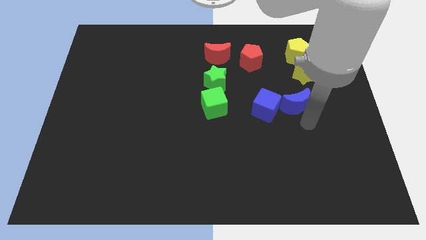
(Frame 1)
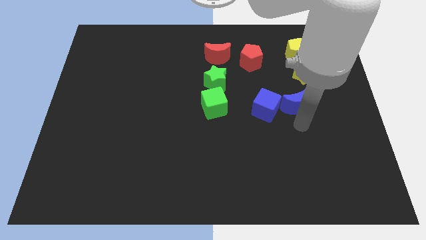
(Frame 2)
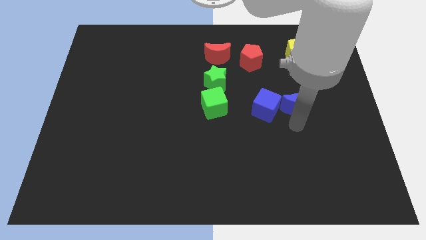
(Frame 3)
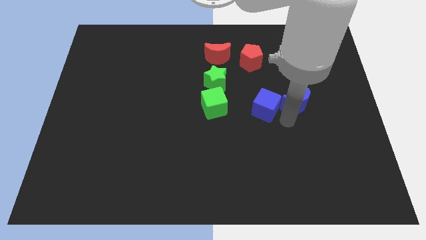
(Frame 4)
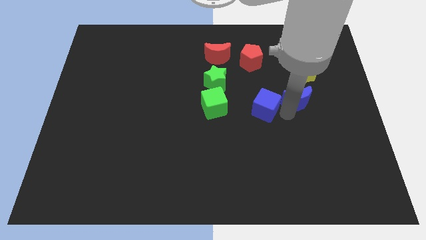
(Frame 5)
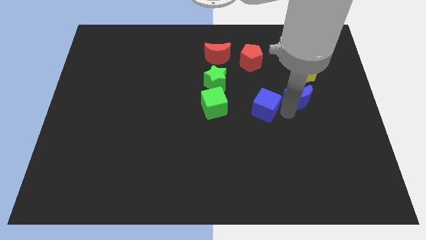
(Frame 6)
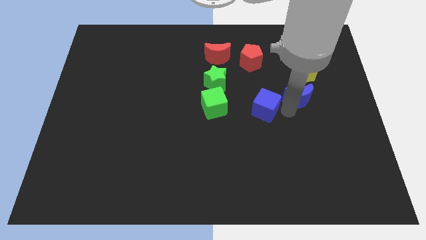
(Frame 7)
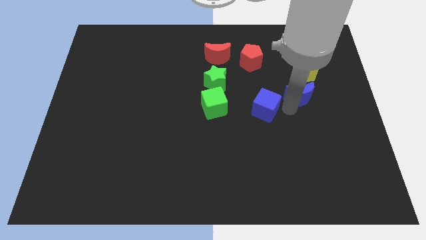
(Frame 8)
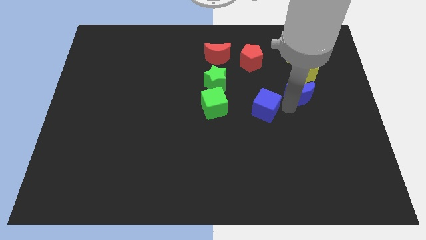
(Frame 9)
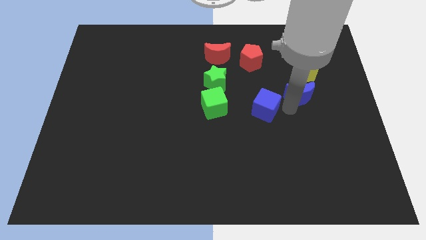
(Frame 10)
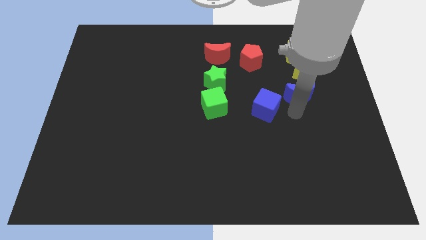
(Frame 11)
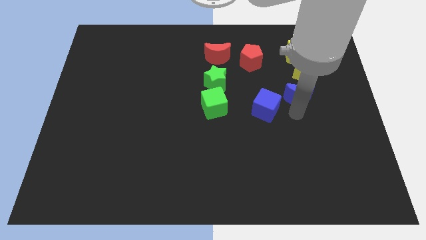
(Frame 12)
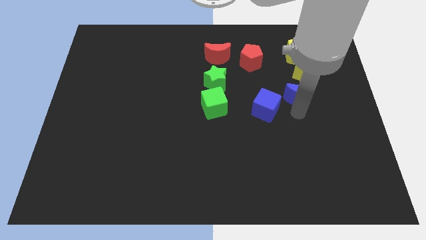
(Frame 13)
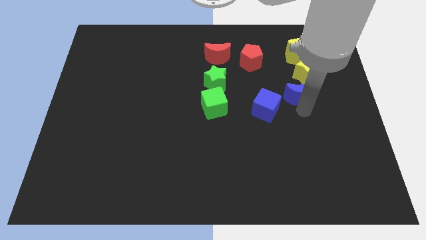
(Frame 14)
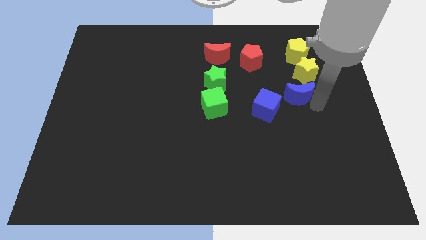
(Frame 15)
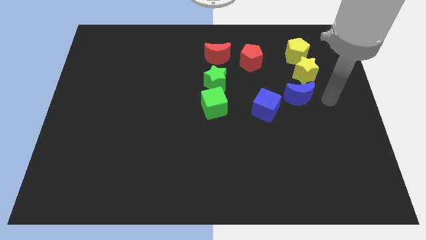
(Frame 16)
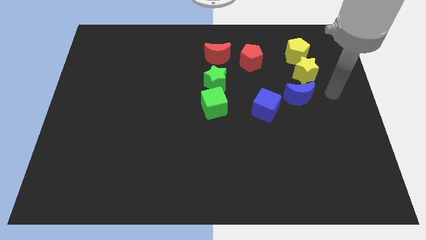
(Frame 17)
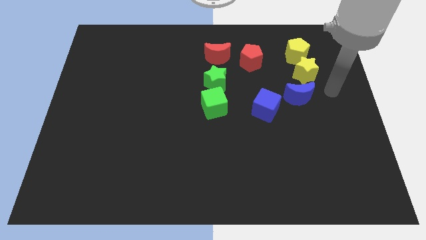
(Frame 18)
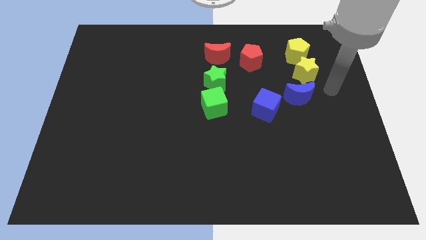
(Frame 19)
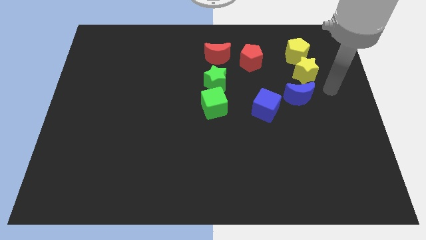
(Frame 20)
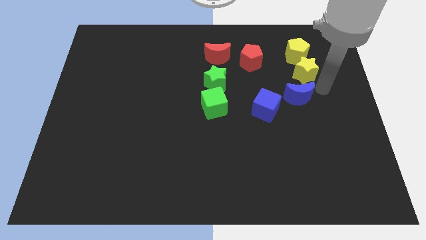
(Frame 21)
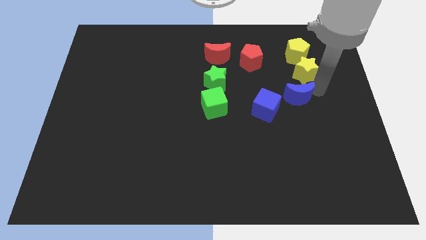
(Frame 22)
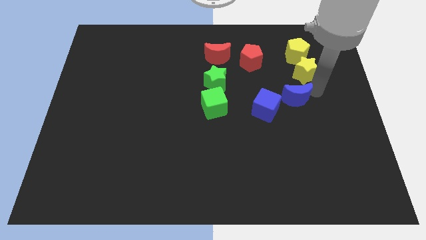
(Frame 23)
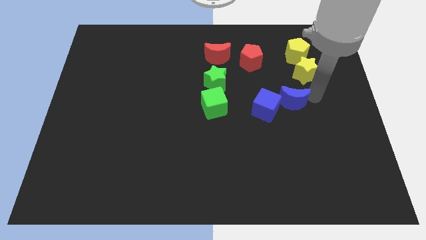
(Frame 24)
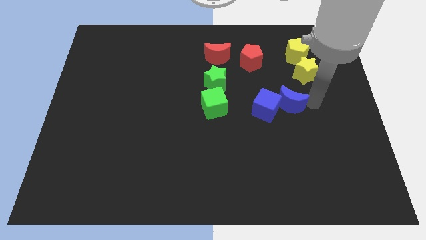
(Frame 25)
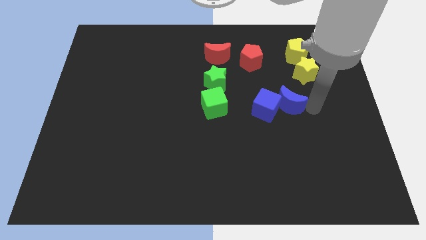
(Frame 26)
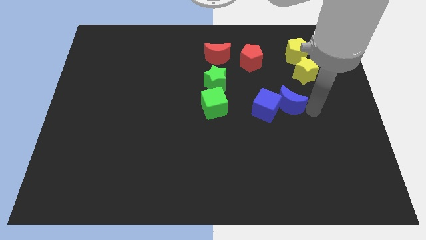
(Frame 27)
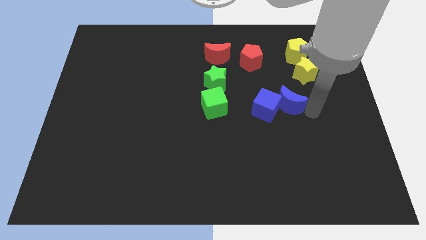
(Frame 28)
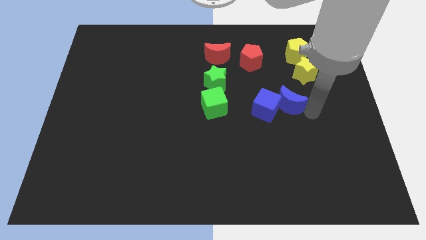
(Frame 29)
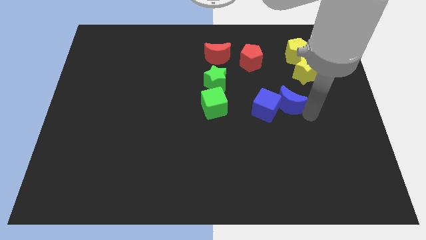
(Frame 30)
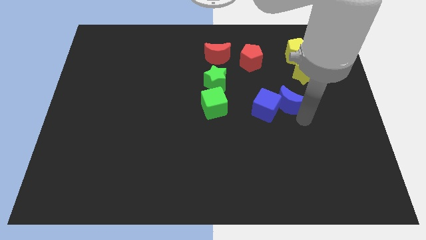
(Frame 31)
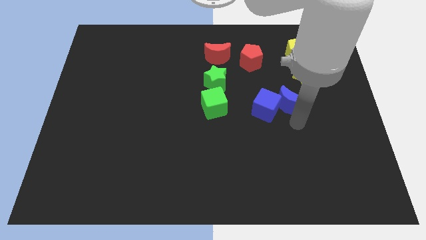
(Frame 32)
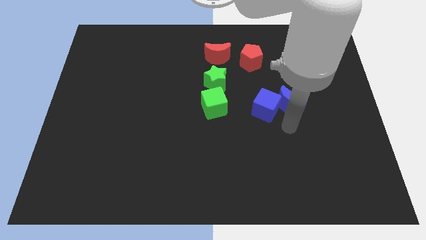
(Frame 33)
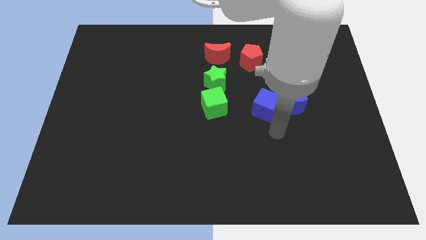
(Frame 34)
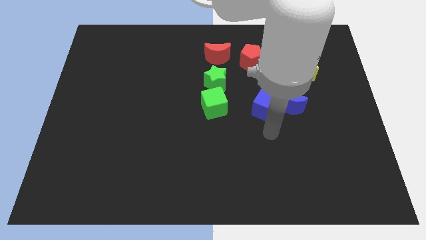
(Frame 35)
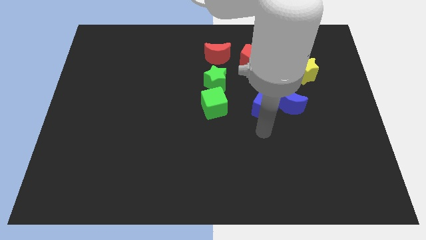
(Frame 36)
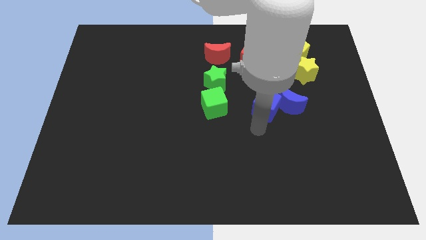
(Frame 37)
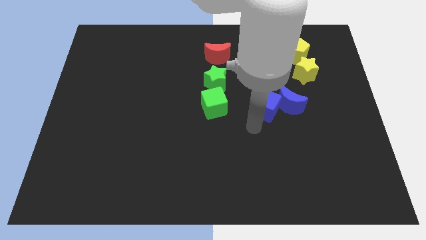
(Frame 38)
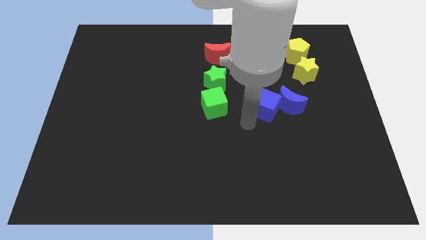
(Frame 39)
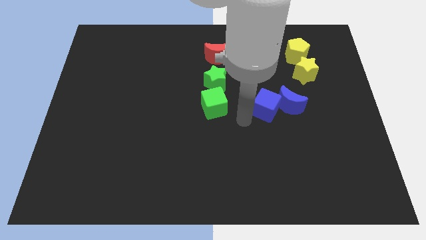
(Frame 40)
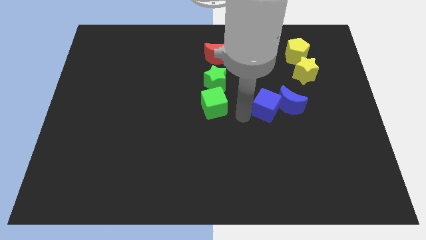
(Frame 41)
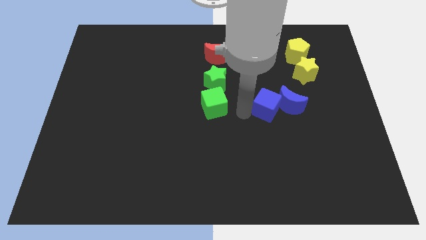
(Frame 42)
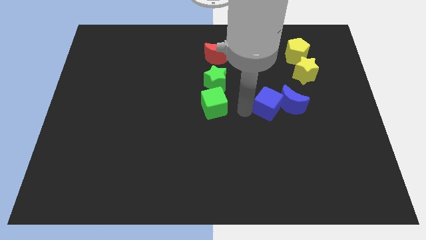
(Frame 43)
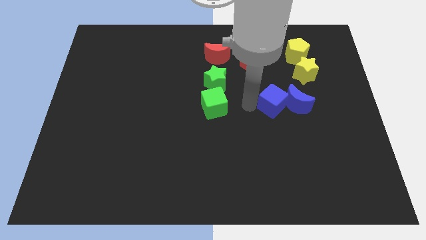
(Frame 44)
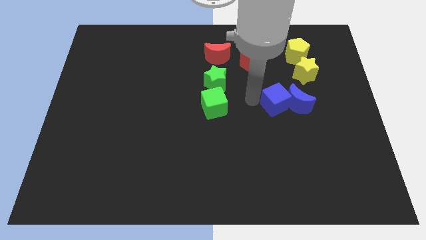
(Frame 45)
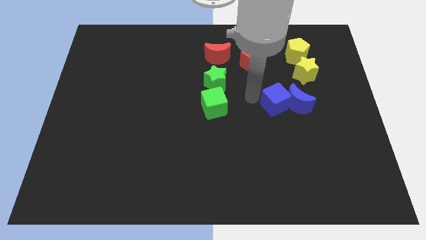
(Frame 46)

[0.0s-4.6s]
slightly move the blue blocks towards the right side

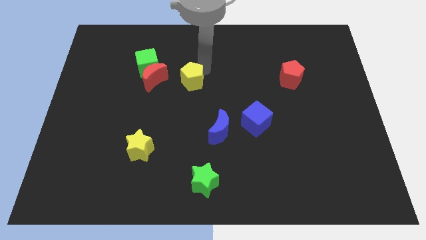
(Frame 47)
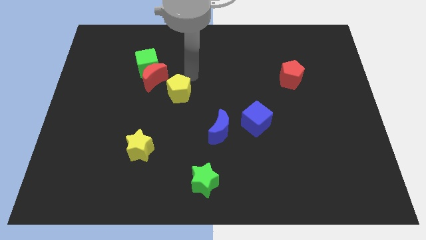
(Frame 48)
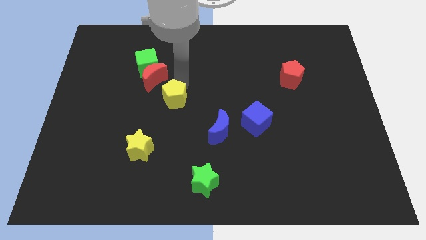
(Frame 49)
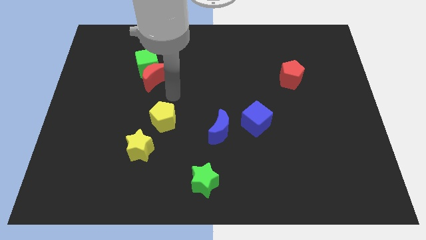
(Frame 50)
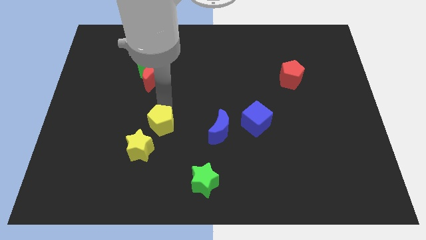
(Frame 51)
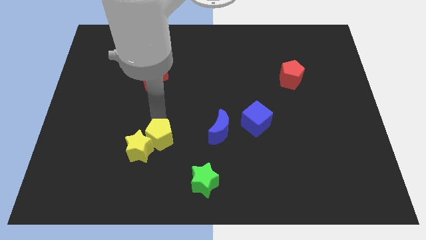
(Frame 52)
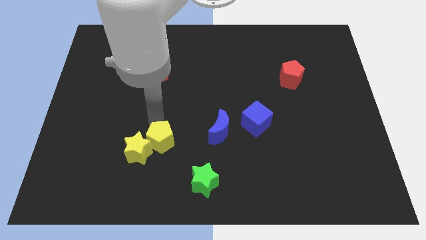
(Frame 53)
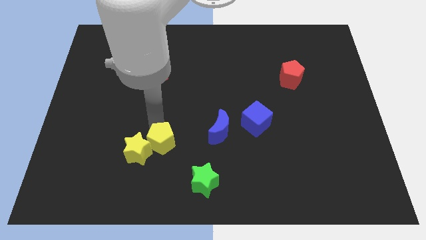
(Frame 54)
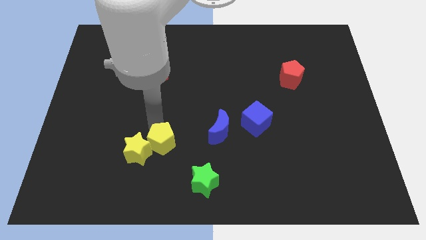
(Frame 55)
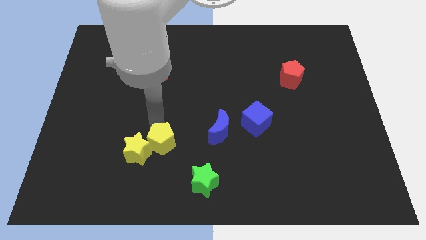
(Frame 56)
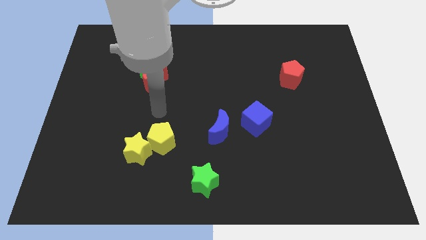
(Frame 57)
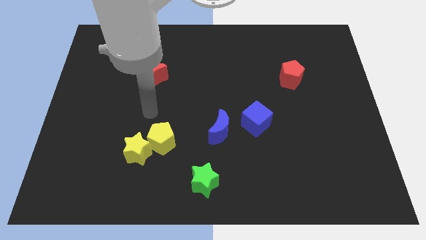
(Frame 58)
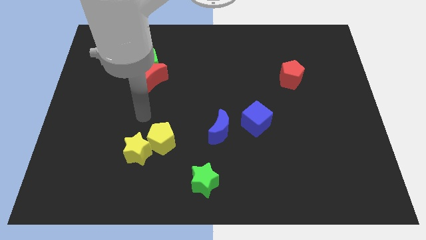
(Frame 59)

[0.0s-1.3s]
push the yellow pentagon into the yellow star

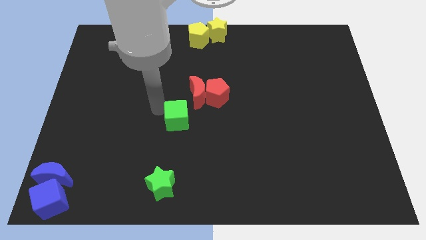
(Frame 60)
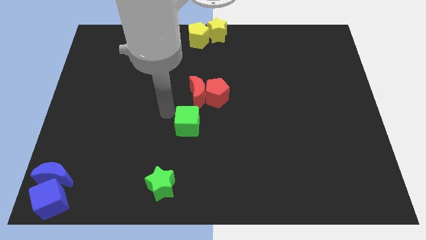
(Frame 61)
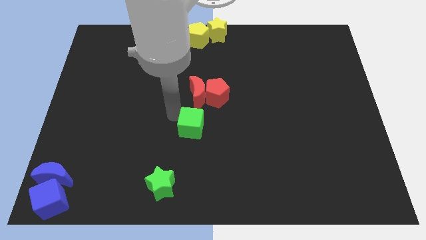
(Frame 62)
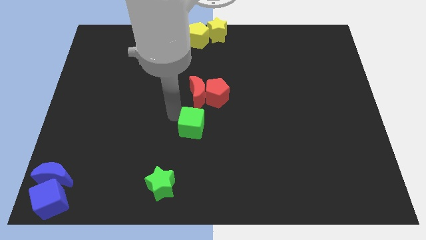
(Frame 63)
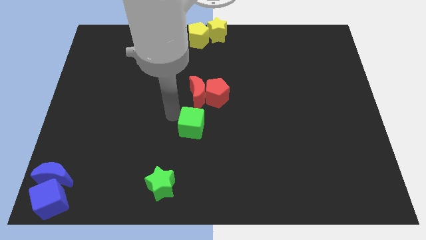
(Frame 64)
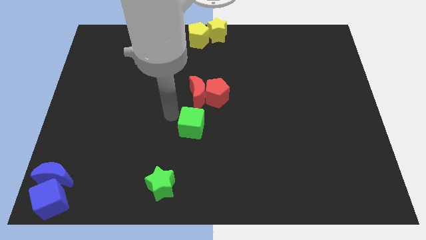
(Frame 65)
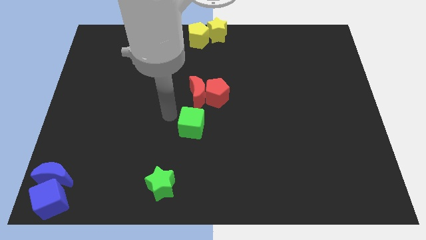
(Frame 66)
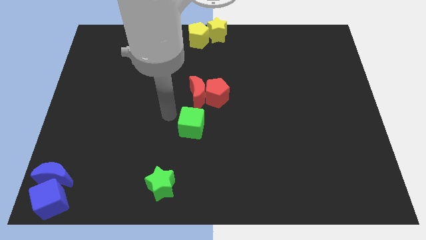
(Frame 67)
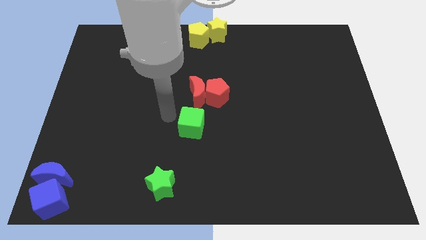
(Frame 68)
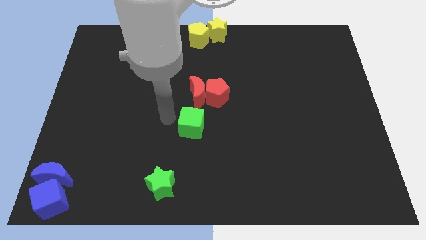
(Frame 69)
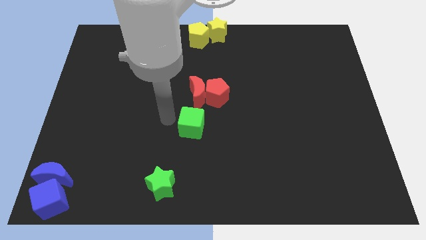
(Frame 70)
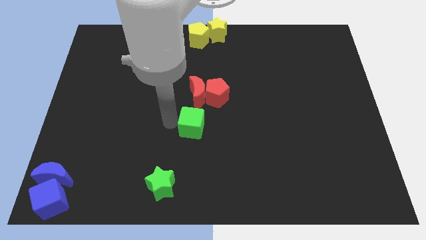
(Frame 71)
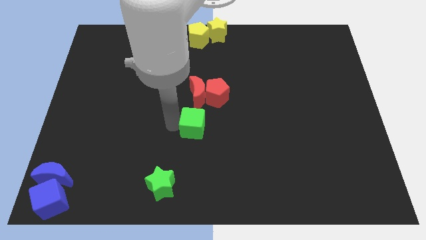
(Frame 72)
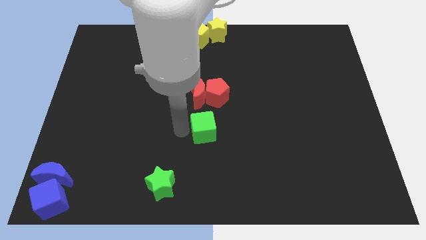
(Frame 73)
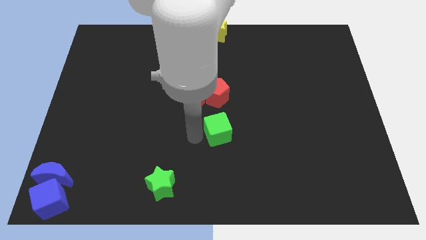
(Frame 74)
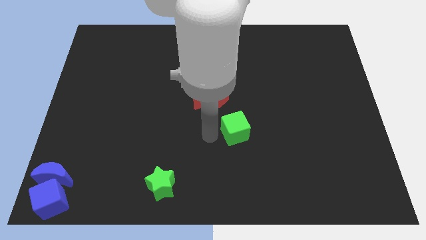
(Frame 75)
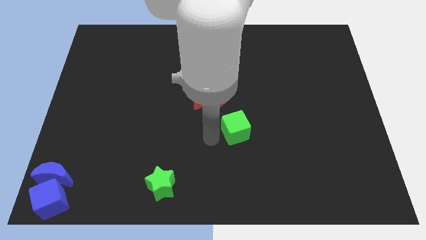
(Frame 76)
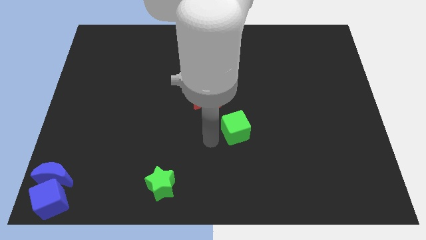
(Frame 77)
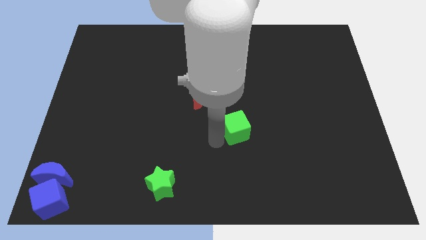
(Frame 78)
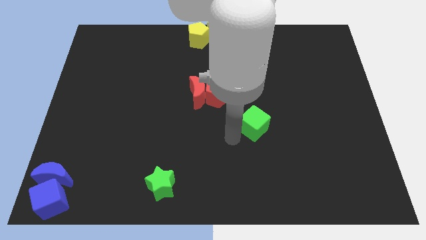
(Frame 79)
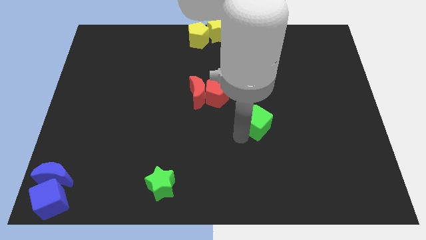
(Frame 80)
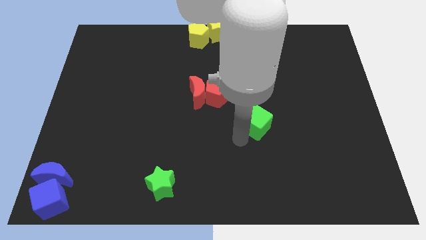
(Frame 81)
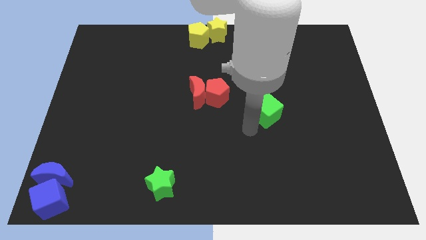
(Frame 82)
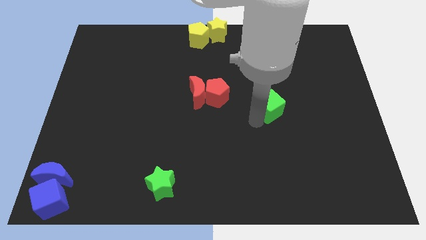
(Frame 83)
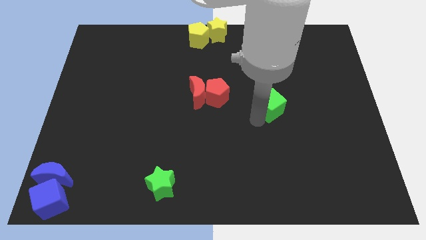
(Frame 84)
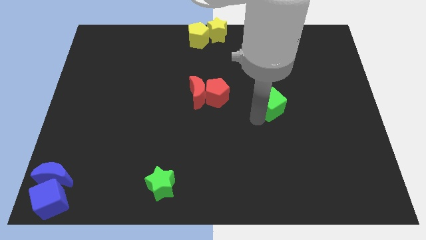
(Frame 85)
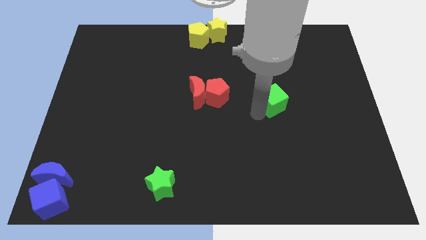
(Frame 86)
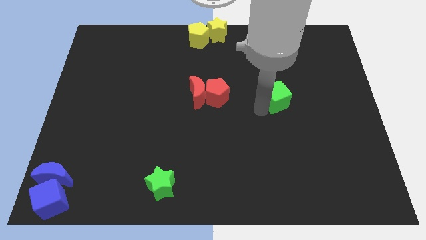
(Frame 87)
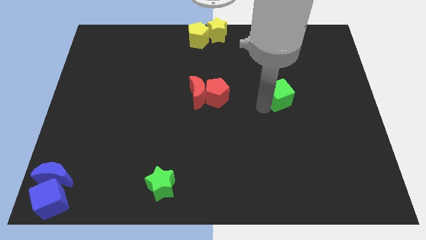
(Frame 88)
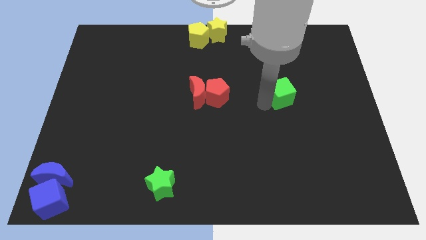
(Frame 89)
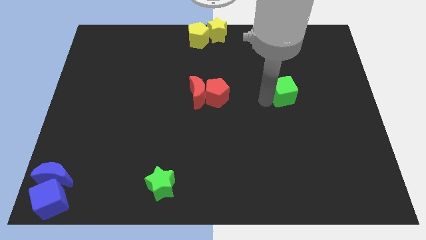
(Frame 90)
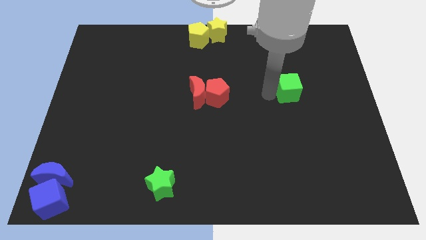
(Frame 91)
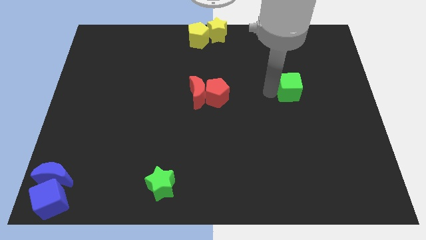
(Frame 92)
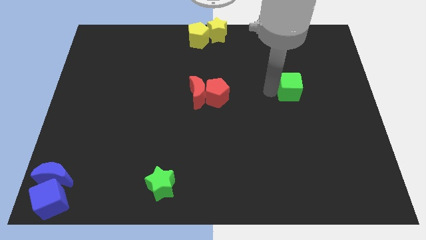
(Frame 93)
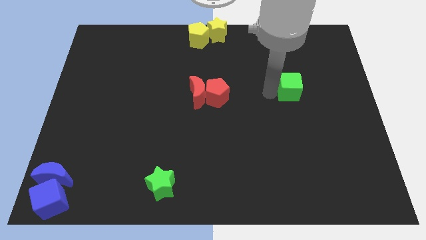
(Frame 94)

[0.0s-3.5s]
move green cube parallel to red blocks
